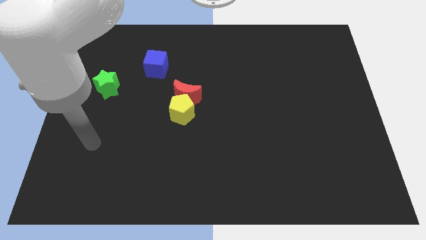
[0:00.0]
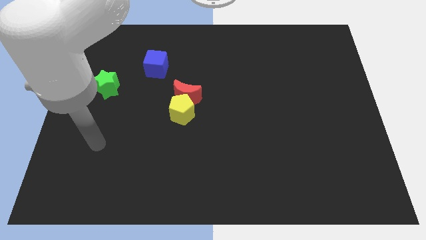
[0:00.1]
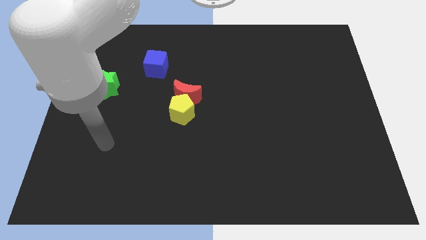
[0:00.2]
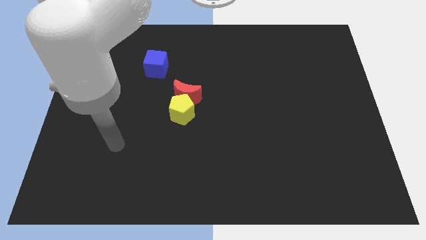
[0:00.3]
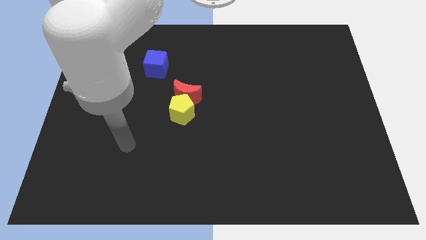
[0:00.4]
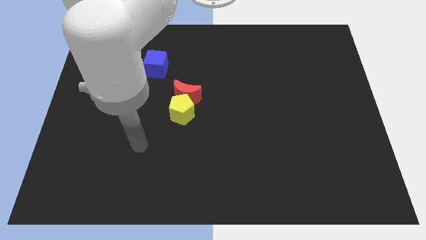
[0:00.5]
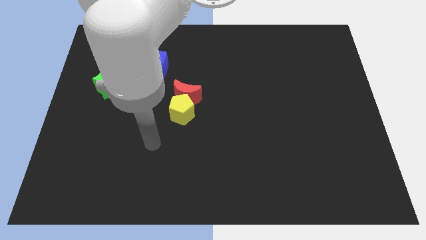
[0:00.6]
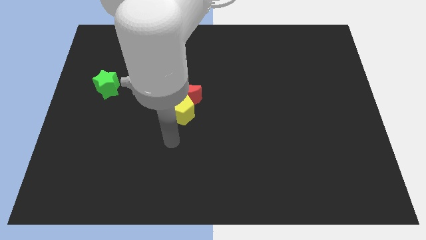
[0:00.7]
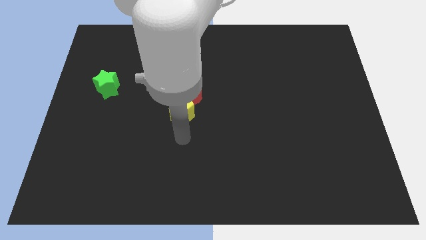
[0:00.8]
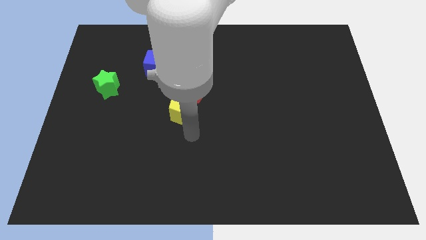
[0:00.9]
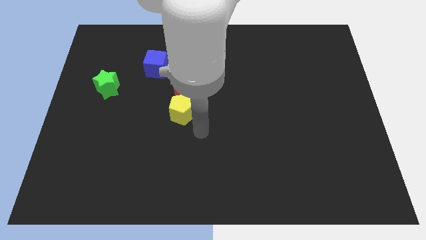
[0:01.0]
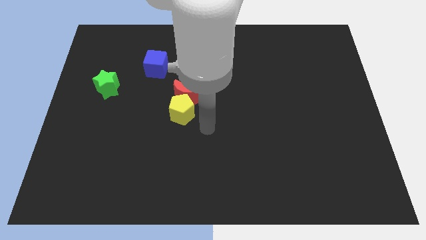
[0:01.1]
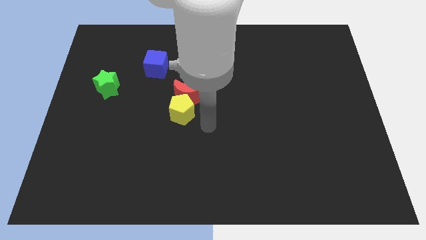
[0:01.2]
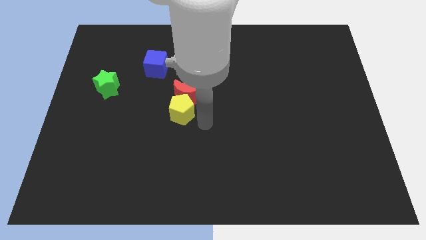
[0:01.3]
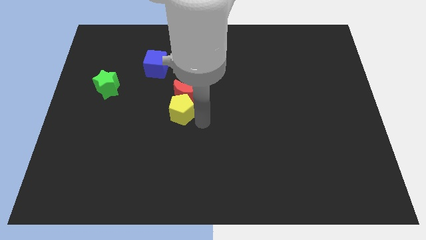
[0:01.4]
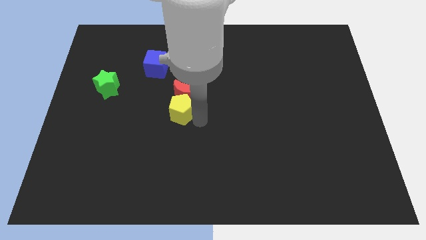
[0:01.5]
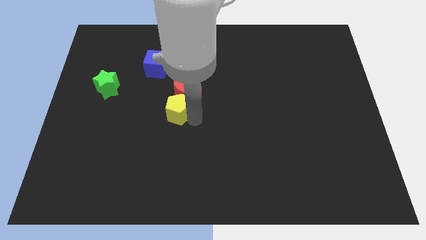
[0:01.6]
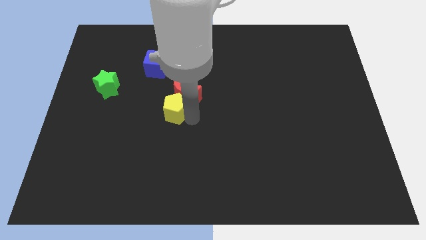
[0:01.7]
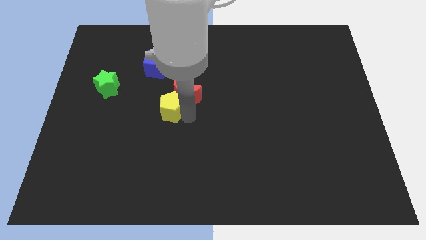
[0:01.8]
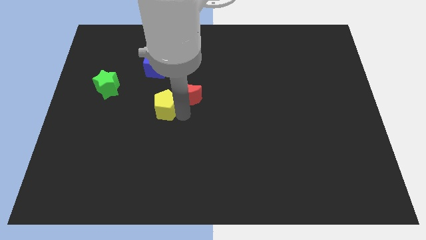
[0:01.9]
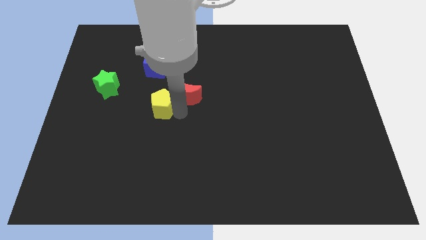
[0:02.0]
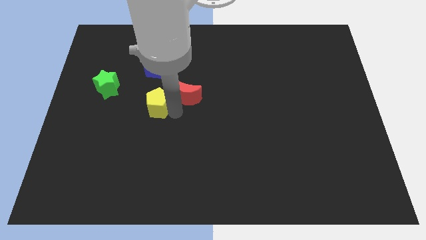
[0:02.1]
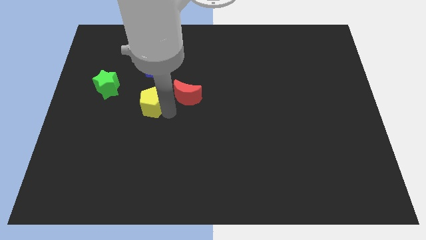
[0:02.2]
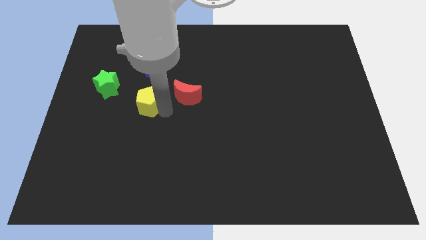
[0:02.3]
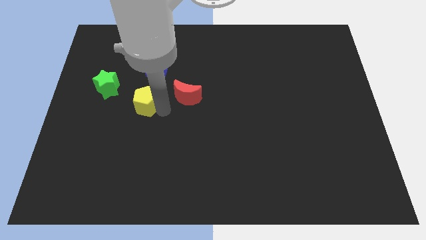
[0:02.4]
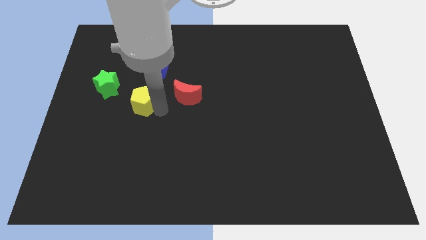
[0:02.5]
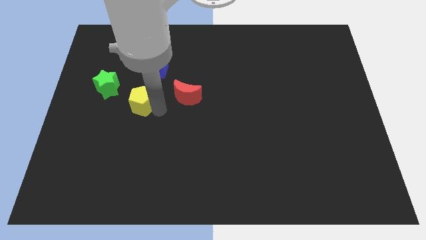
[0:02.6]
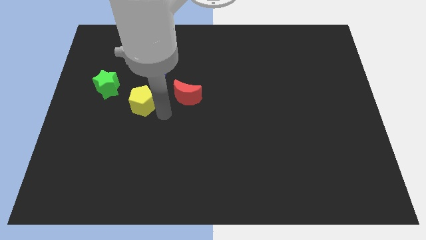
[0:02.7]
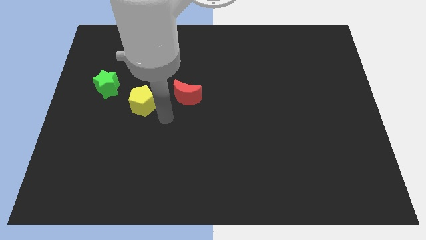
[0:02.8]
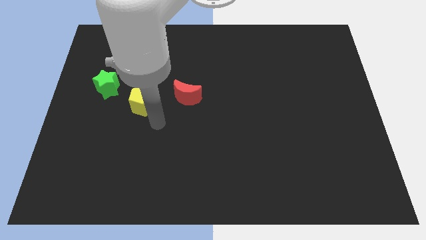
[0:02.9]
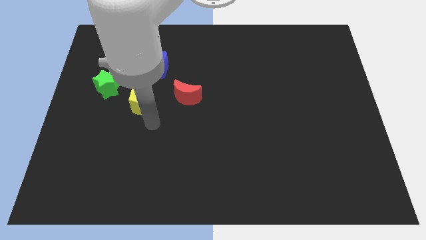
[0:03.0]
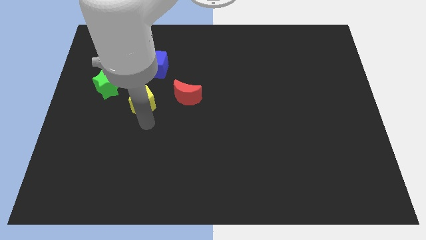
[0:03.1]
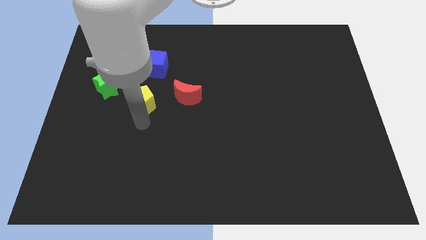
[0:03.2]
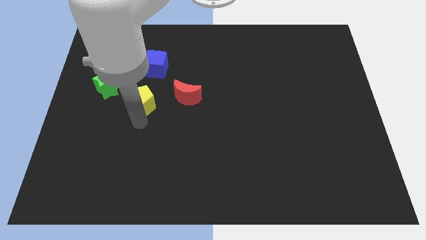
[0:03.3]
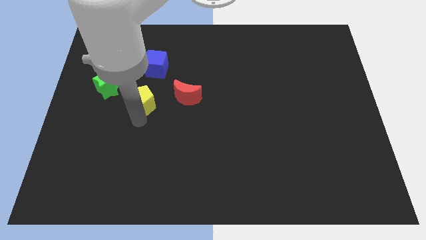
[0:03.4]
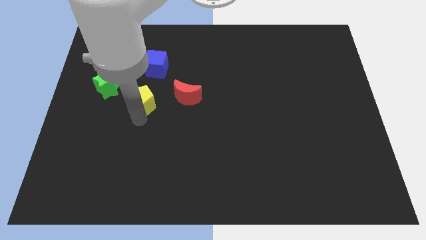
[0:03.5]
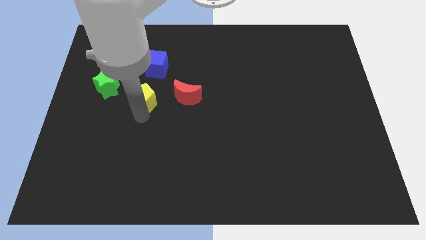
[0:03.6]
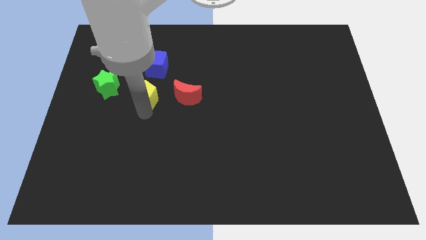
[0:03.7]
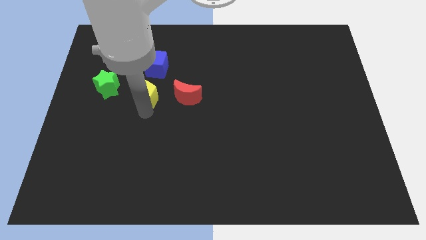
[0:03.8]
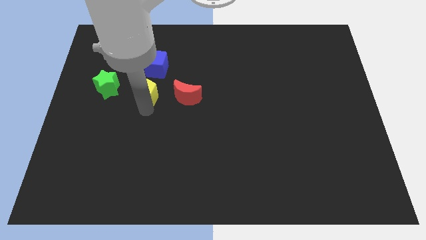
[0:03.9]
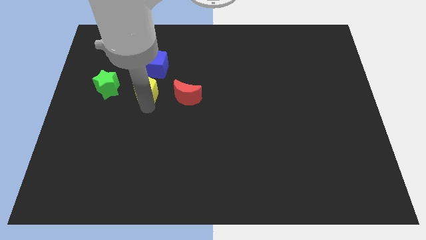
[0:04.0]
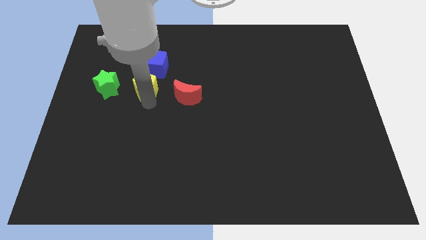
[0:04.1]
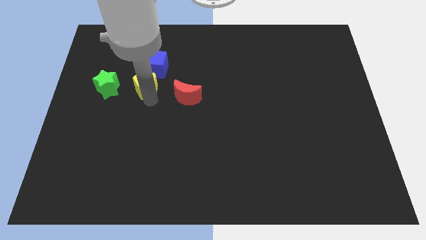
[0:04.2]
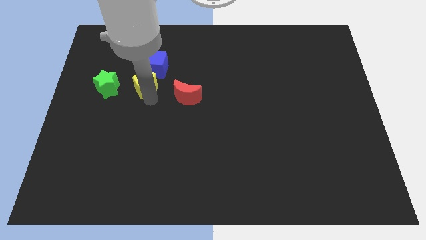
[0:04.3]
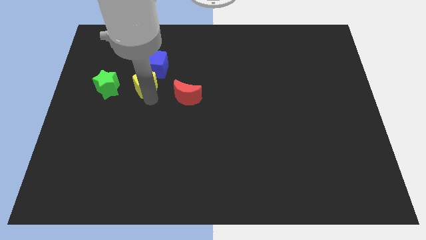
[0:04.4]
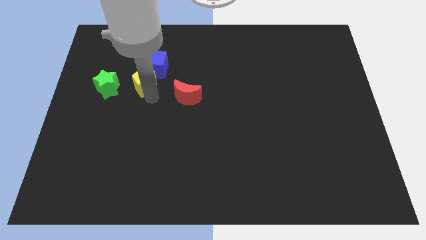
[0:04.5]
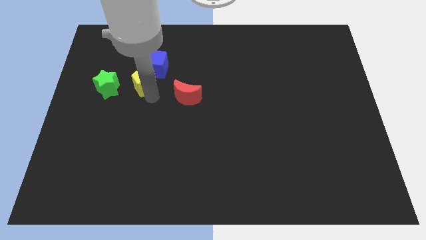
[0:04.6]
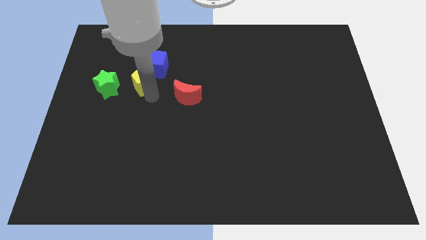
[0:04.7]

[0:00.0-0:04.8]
slide the pentagon next to the cube

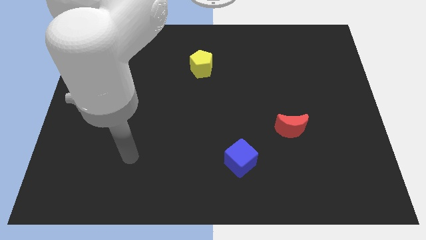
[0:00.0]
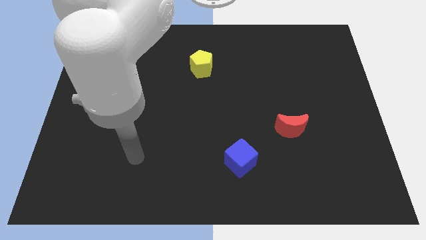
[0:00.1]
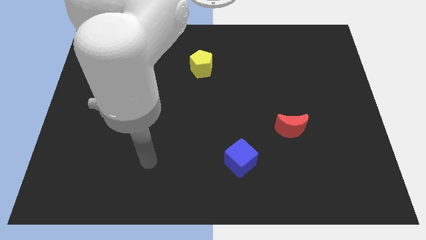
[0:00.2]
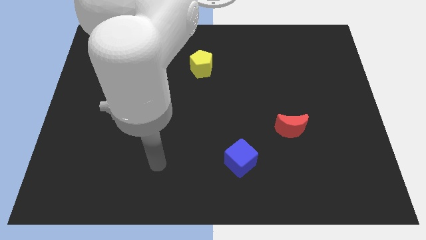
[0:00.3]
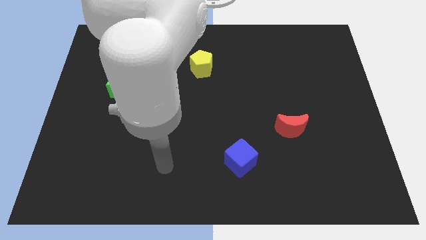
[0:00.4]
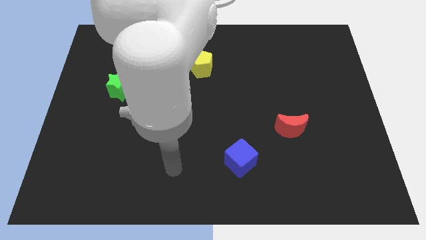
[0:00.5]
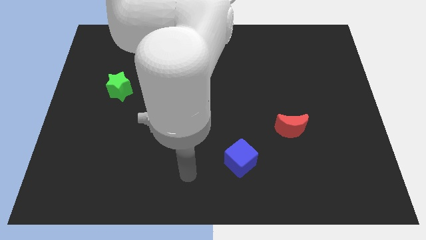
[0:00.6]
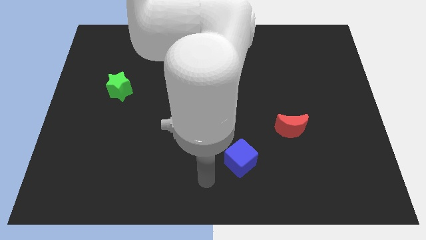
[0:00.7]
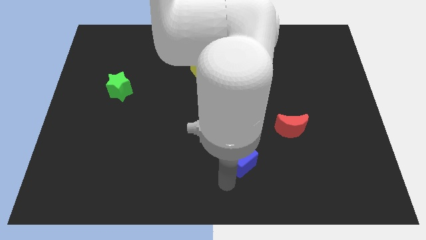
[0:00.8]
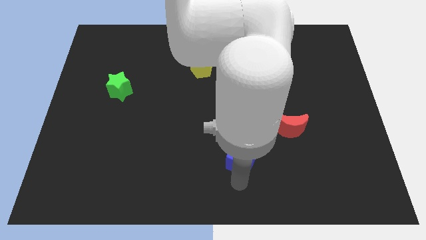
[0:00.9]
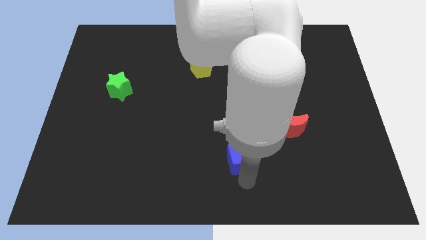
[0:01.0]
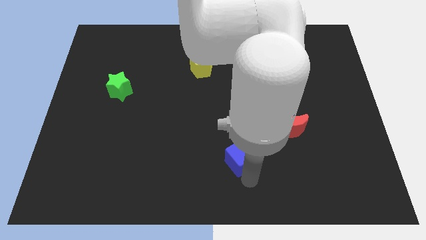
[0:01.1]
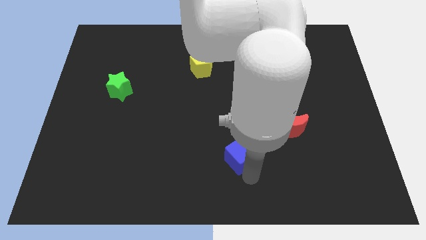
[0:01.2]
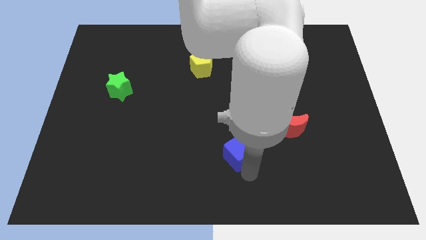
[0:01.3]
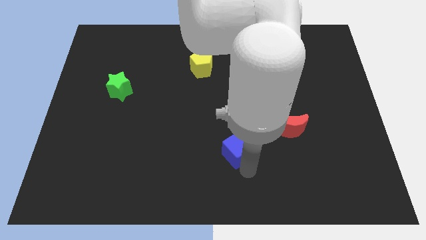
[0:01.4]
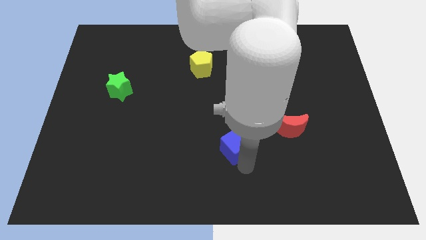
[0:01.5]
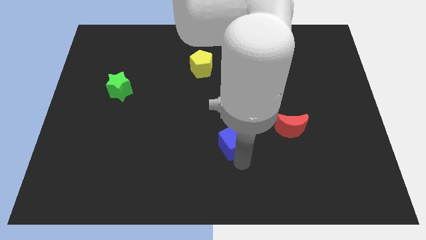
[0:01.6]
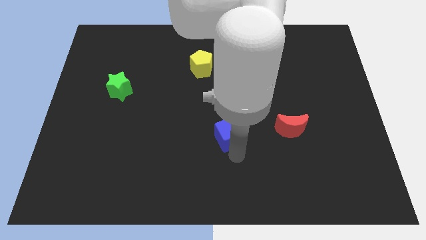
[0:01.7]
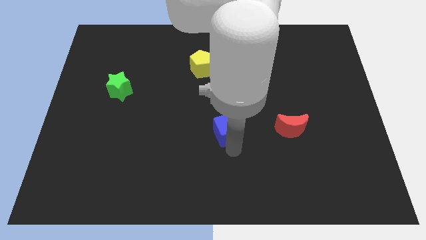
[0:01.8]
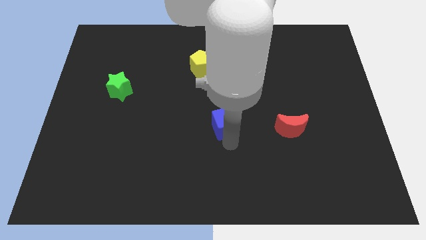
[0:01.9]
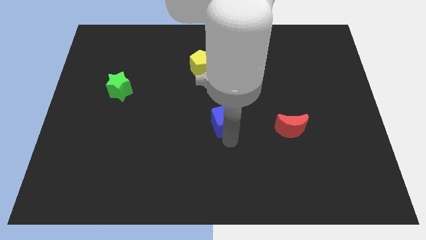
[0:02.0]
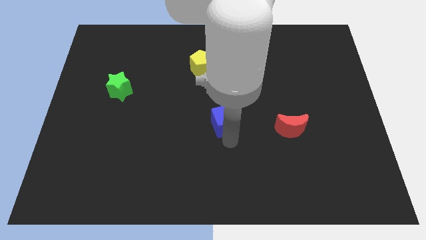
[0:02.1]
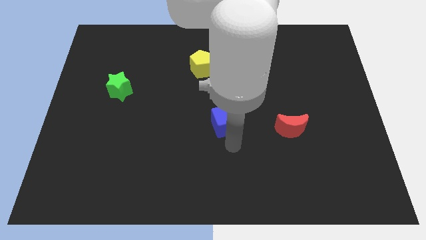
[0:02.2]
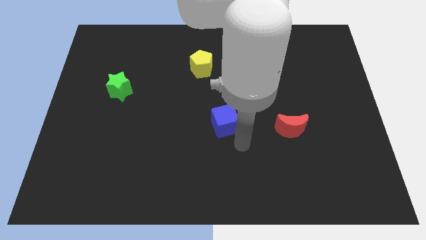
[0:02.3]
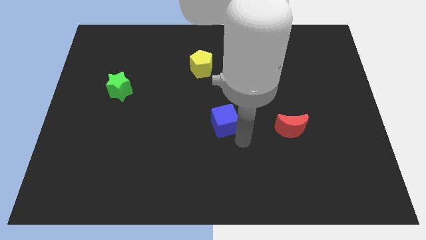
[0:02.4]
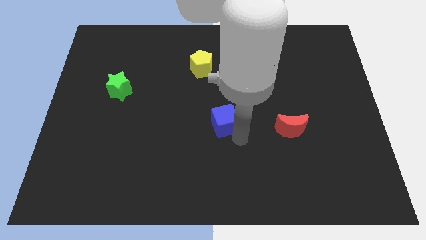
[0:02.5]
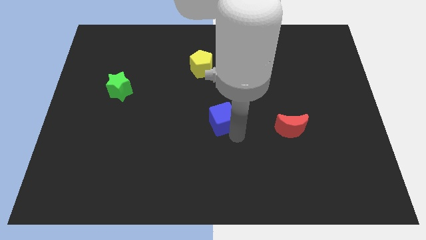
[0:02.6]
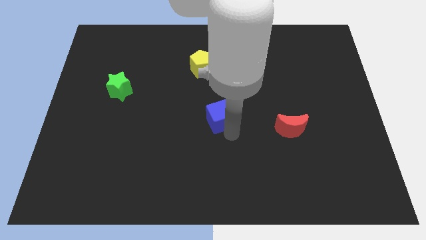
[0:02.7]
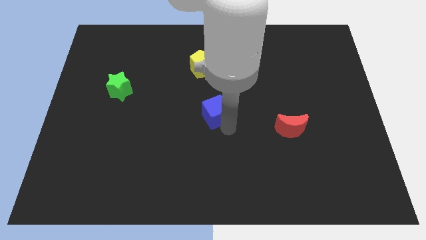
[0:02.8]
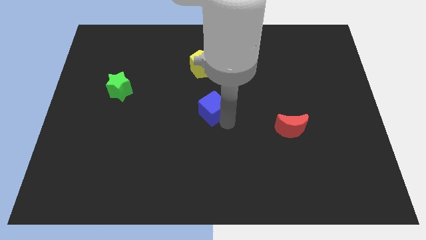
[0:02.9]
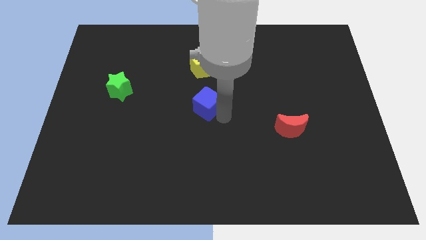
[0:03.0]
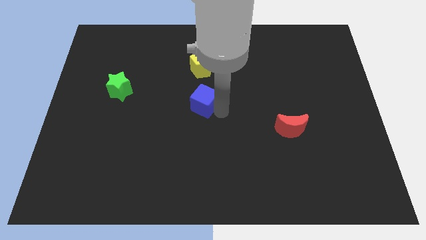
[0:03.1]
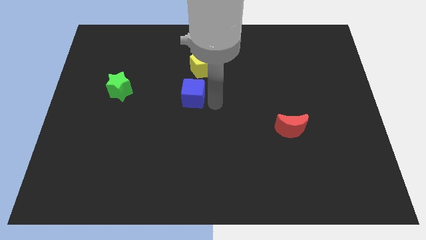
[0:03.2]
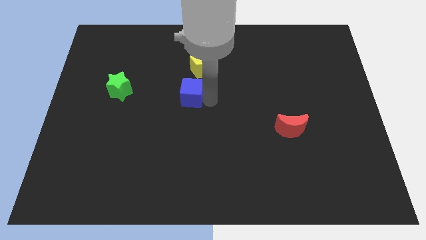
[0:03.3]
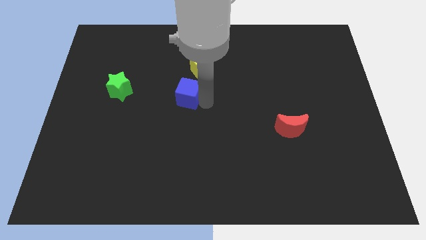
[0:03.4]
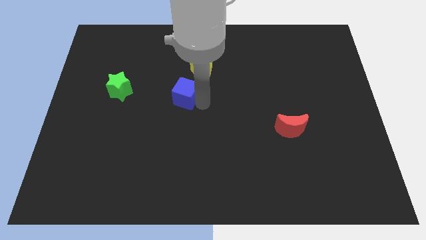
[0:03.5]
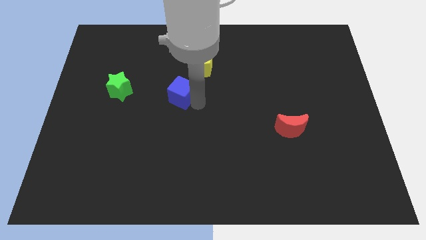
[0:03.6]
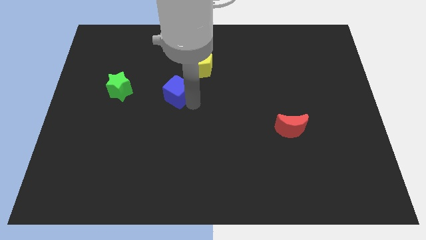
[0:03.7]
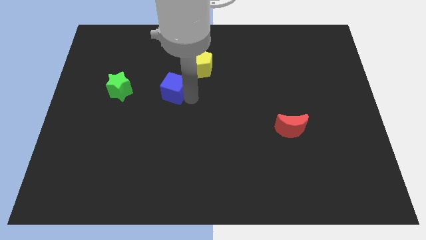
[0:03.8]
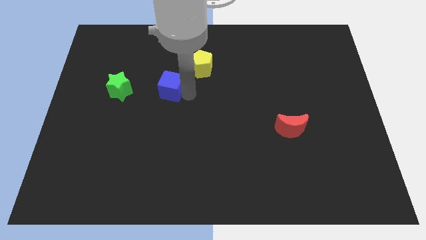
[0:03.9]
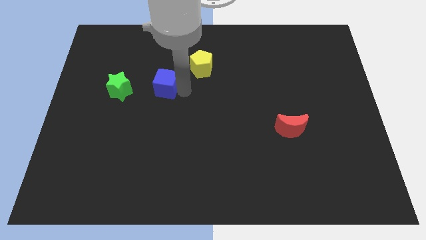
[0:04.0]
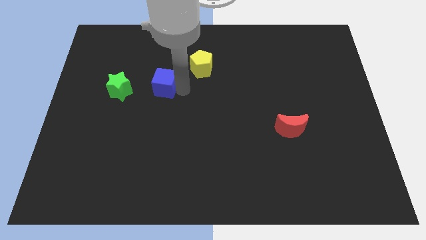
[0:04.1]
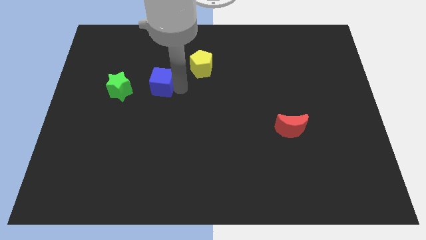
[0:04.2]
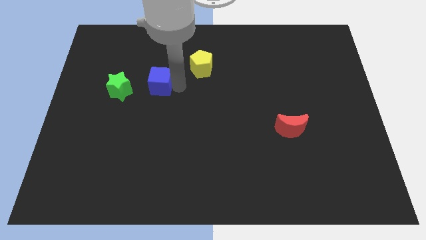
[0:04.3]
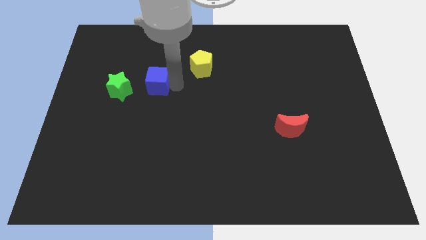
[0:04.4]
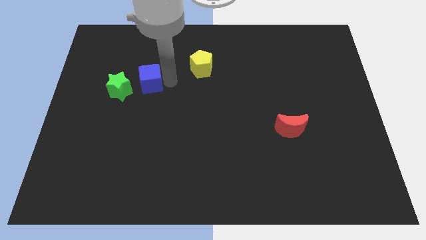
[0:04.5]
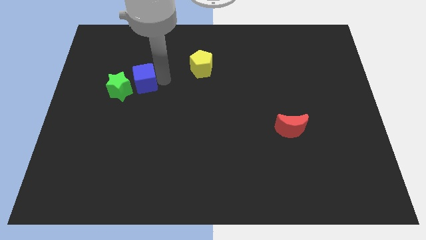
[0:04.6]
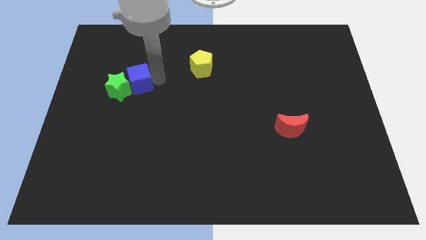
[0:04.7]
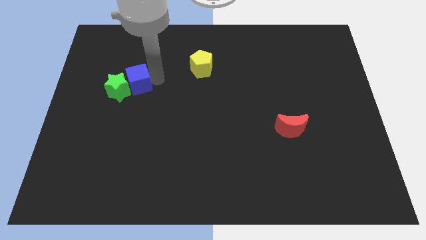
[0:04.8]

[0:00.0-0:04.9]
slide the blue block close to the star
